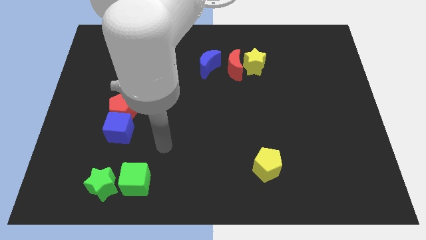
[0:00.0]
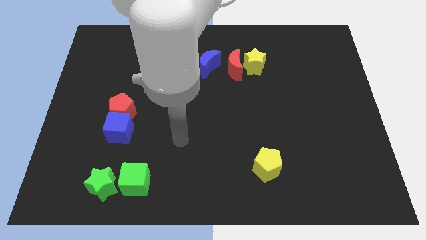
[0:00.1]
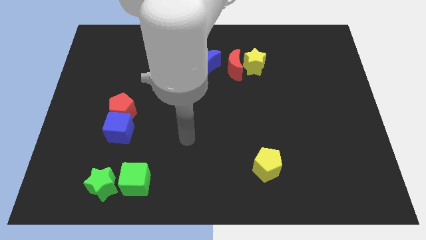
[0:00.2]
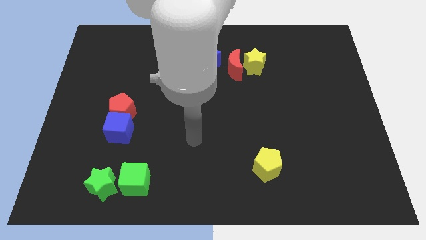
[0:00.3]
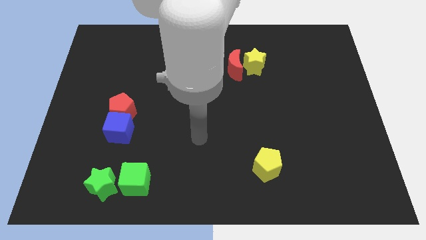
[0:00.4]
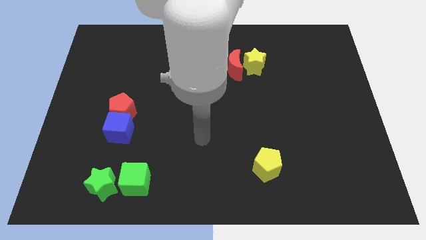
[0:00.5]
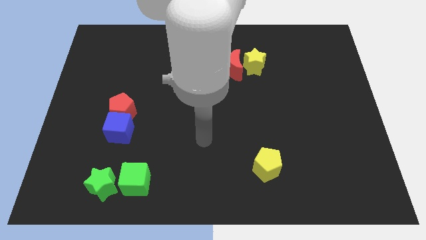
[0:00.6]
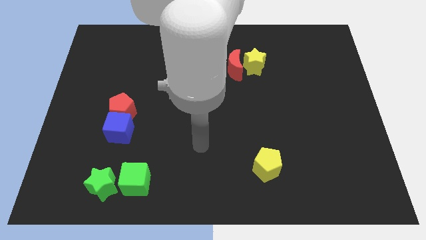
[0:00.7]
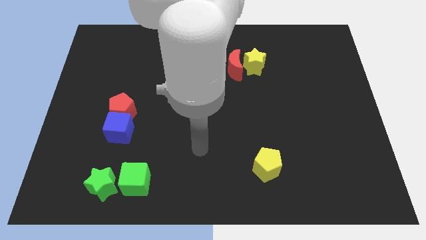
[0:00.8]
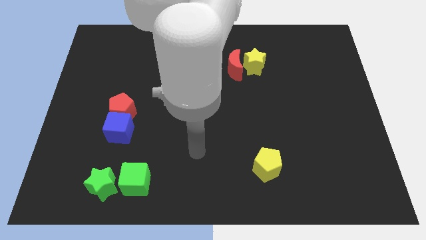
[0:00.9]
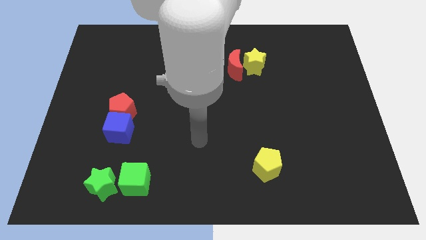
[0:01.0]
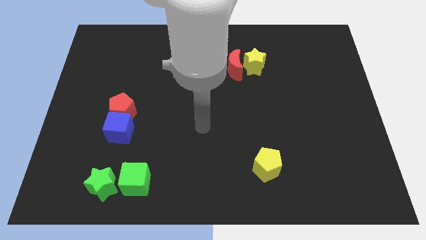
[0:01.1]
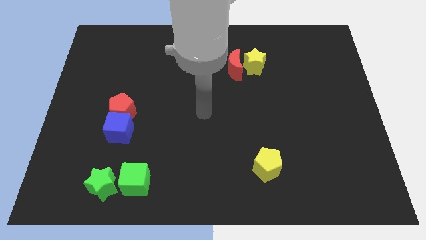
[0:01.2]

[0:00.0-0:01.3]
move your arm to the right of the blue cube

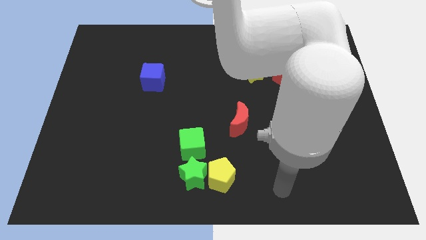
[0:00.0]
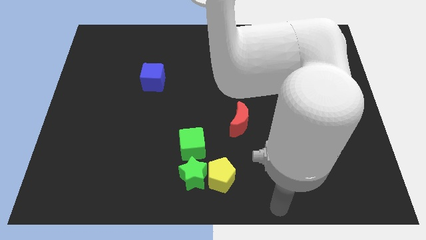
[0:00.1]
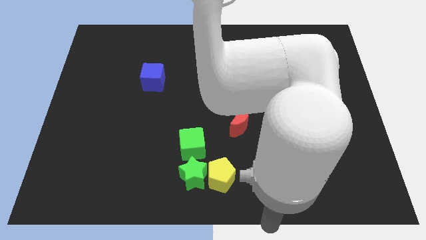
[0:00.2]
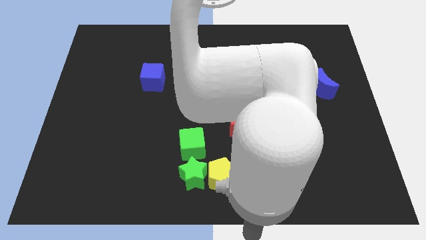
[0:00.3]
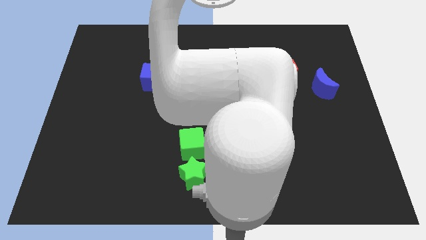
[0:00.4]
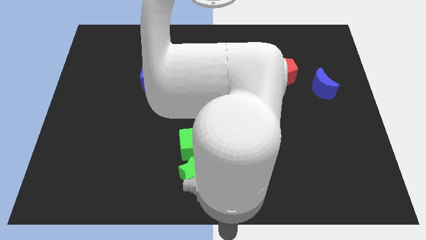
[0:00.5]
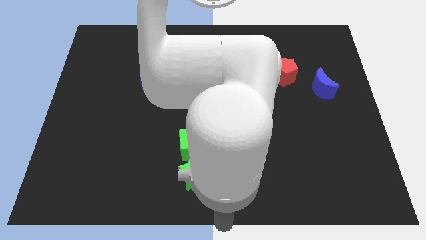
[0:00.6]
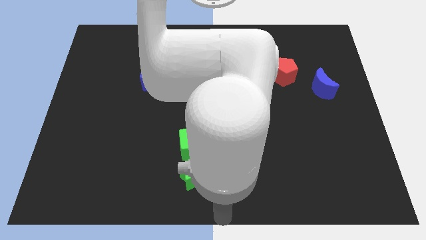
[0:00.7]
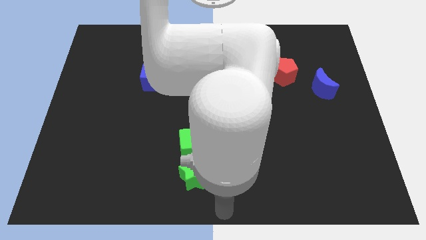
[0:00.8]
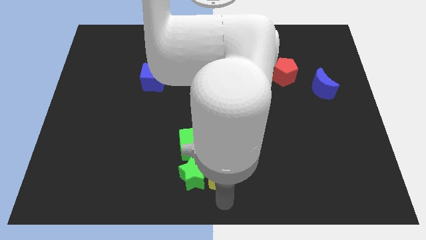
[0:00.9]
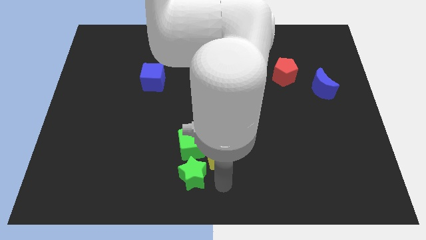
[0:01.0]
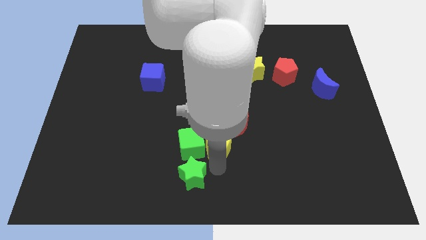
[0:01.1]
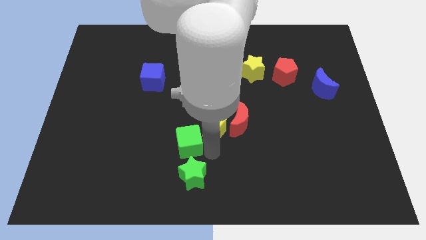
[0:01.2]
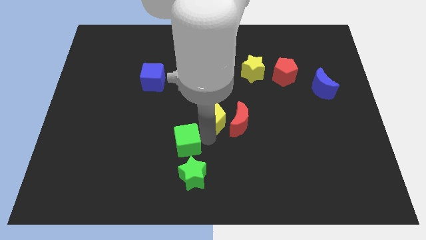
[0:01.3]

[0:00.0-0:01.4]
push the yellow pentagon upwards

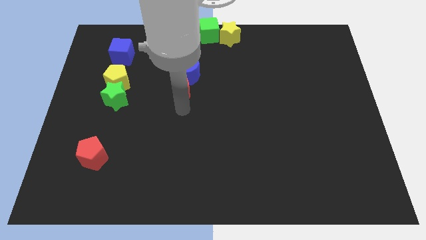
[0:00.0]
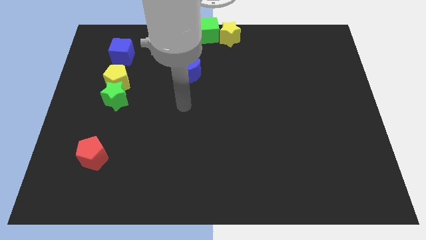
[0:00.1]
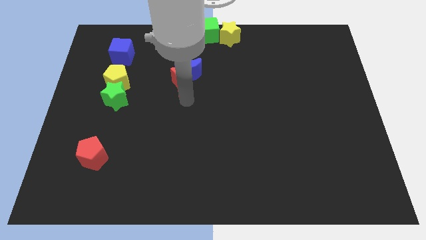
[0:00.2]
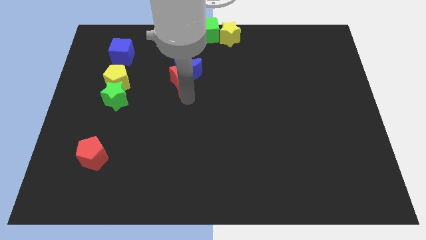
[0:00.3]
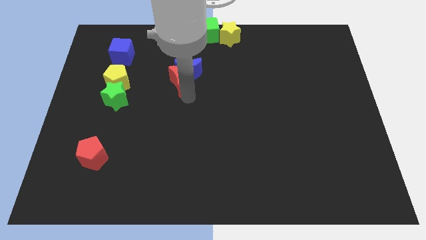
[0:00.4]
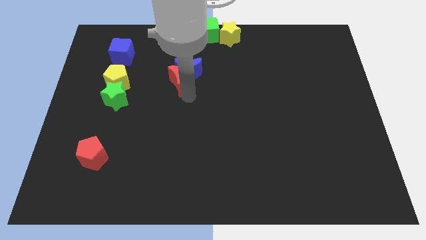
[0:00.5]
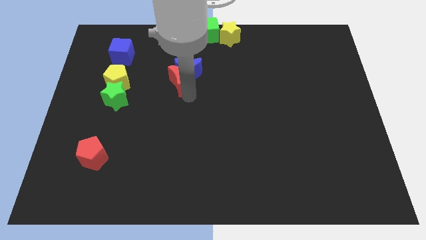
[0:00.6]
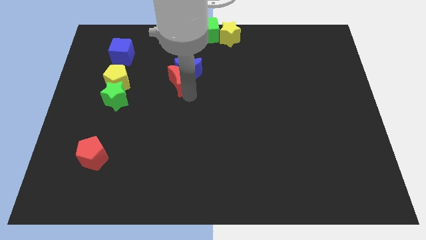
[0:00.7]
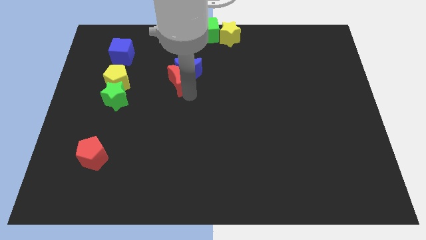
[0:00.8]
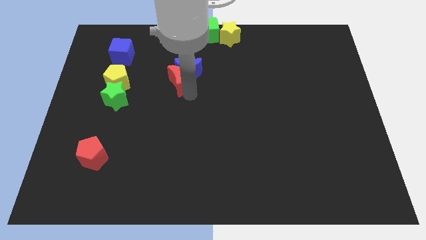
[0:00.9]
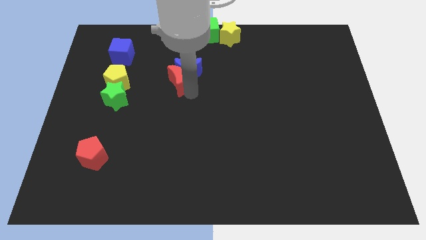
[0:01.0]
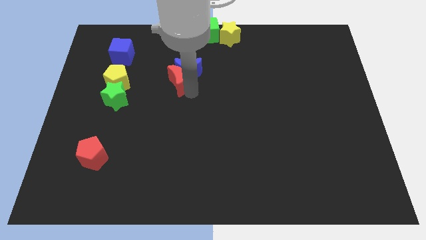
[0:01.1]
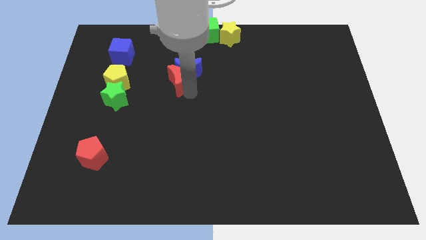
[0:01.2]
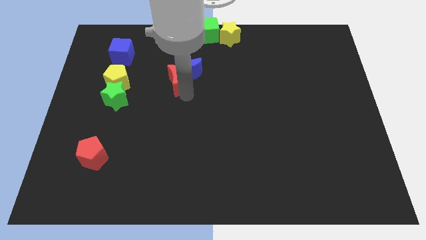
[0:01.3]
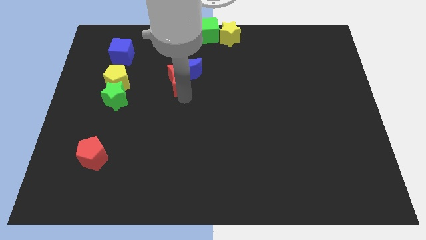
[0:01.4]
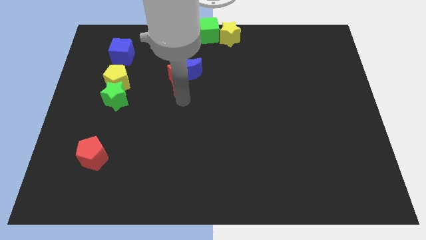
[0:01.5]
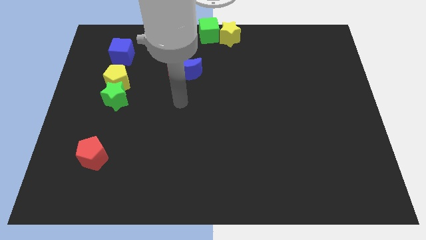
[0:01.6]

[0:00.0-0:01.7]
move the red crescent slightly towards the left side of the blue cube

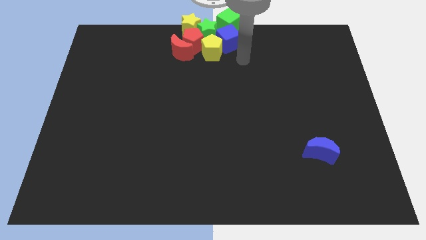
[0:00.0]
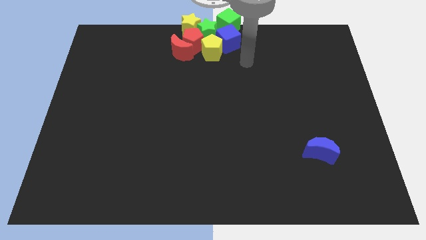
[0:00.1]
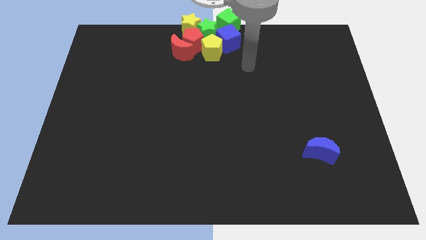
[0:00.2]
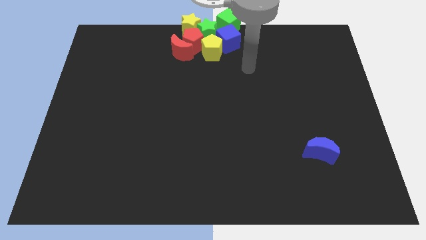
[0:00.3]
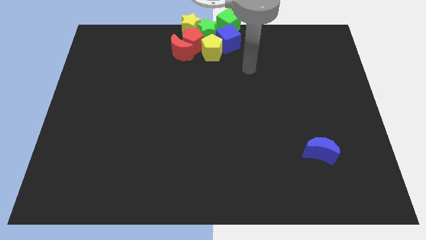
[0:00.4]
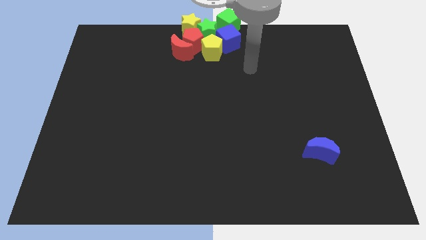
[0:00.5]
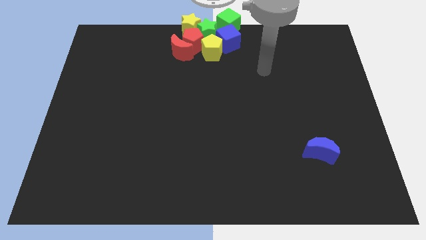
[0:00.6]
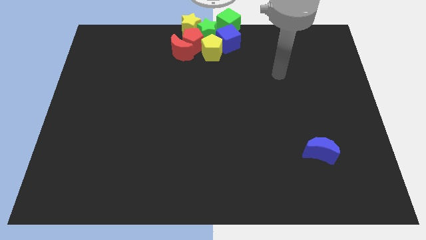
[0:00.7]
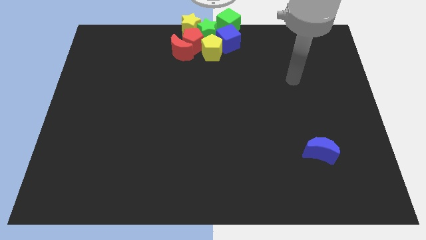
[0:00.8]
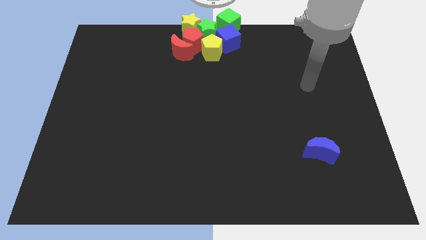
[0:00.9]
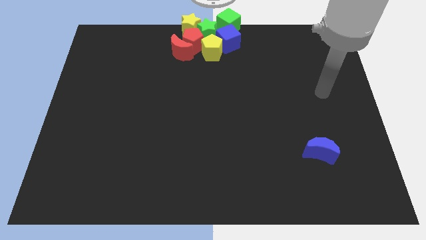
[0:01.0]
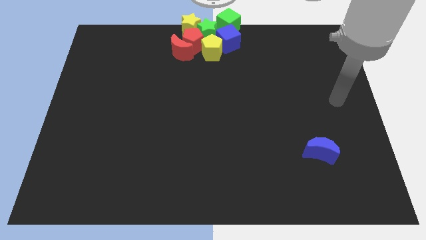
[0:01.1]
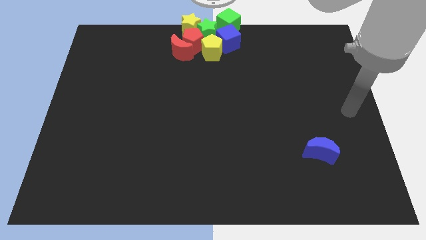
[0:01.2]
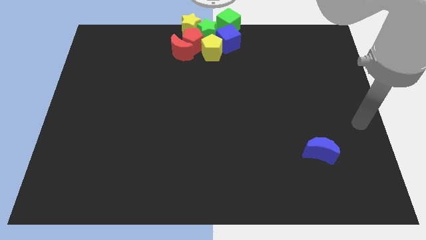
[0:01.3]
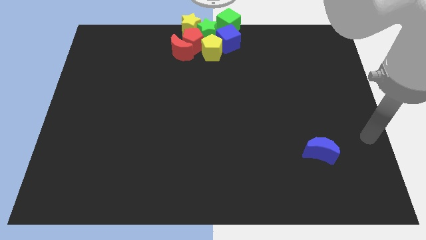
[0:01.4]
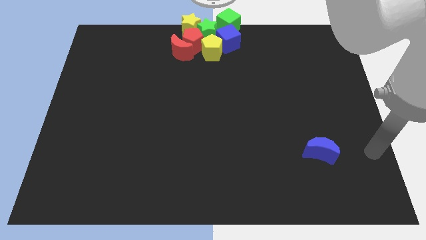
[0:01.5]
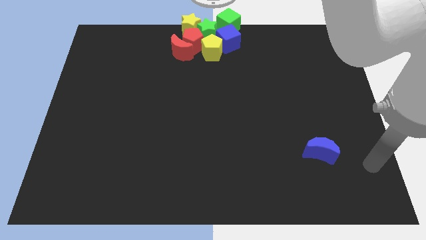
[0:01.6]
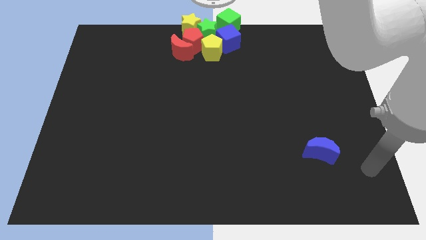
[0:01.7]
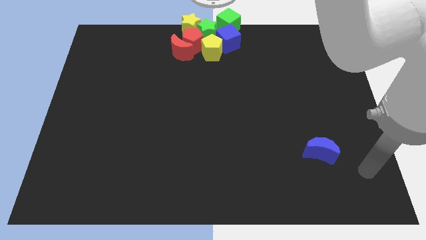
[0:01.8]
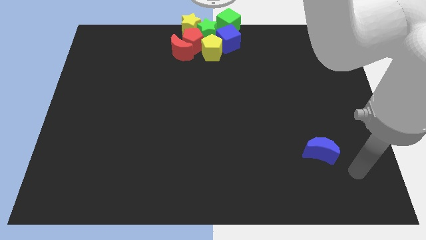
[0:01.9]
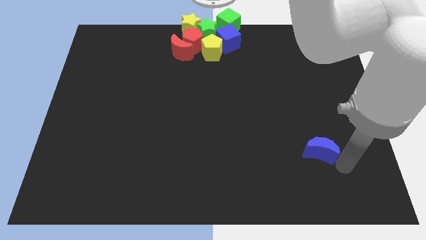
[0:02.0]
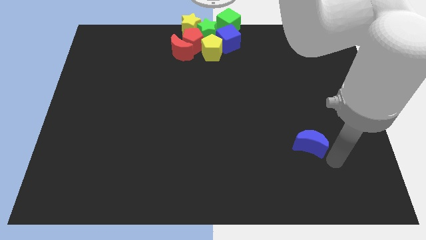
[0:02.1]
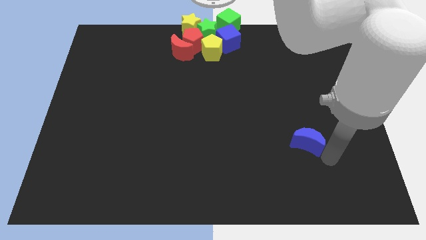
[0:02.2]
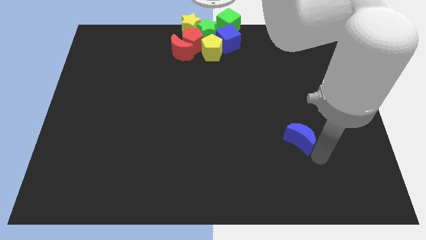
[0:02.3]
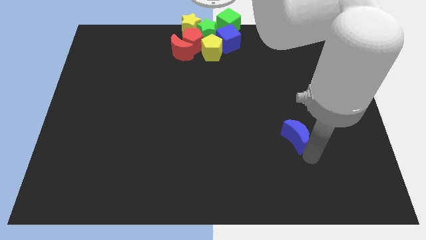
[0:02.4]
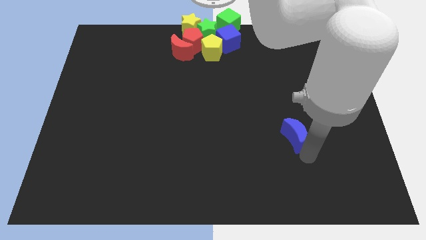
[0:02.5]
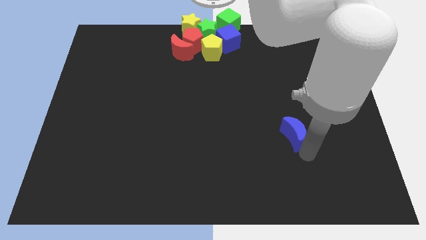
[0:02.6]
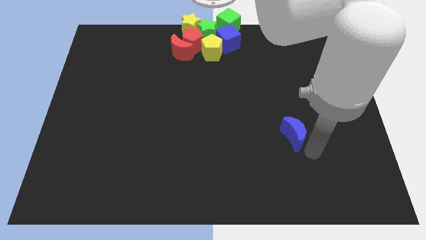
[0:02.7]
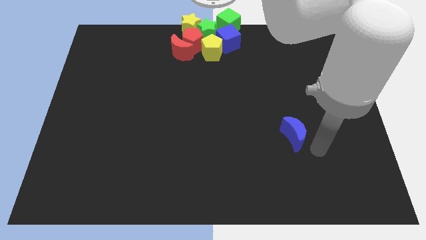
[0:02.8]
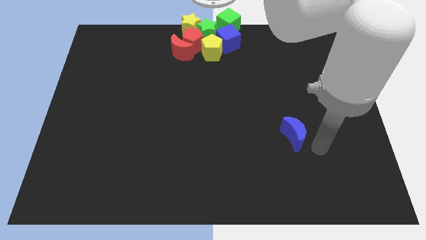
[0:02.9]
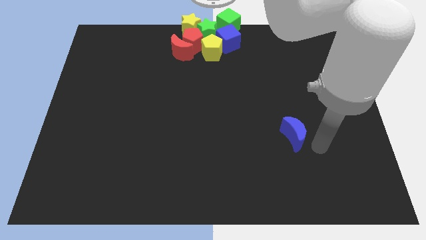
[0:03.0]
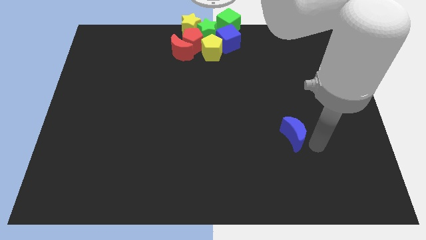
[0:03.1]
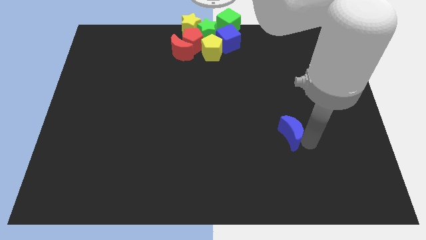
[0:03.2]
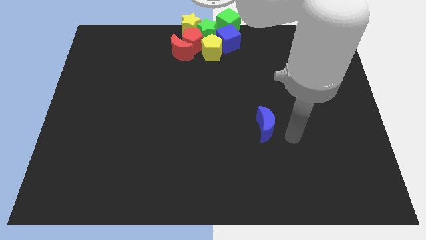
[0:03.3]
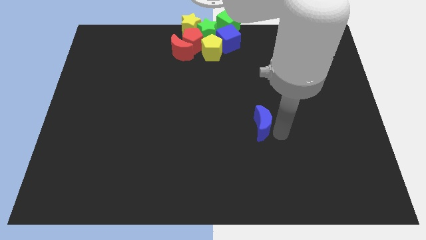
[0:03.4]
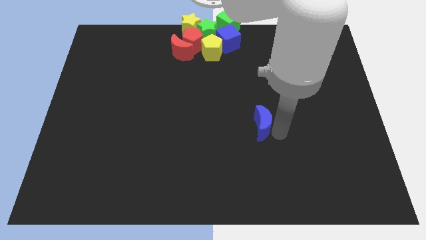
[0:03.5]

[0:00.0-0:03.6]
push the blue crescent towards slightly to the center of the board

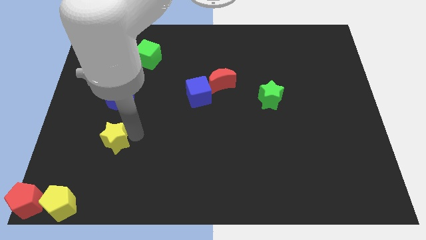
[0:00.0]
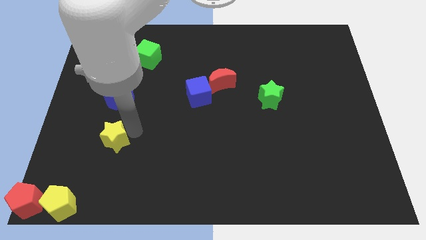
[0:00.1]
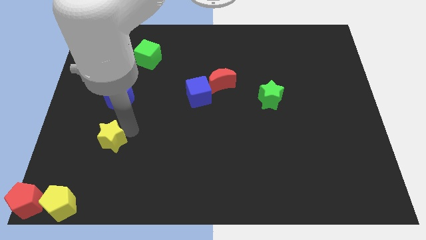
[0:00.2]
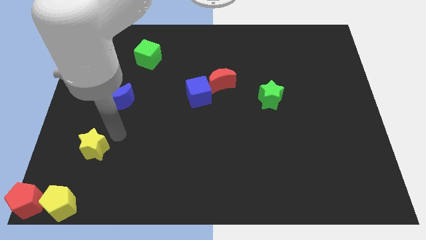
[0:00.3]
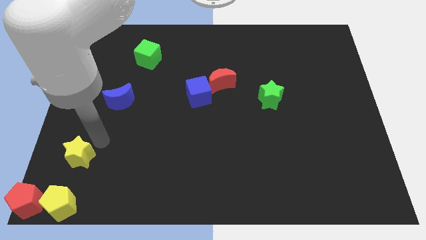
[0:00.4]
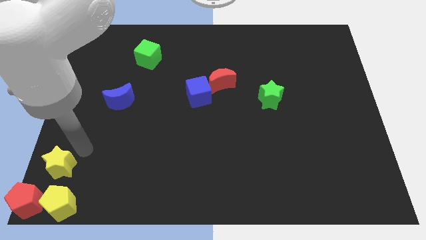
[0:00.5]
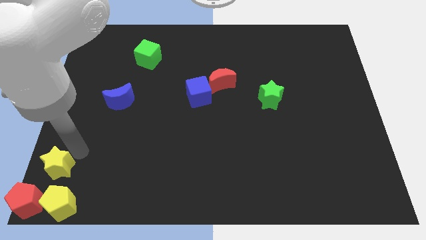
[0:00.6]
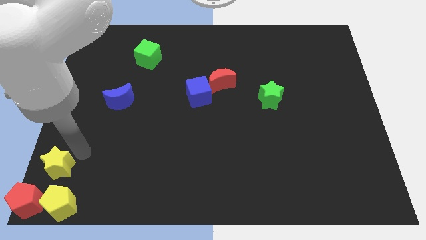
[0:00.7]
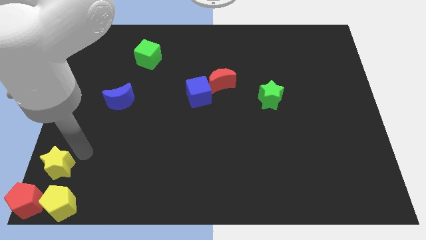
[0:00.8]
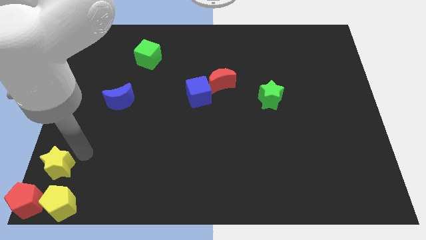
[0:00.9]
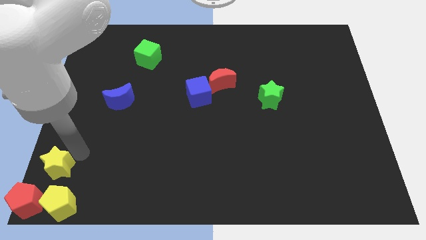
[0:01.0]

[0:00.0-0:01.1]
move yellow star above yellow pentagon
